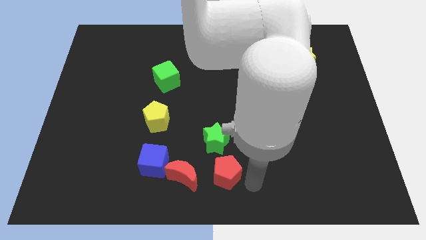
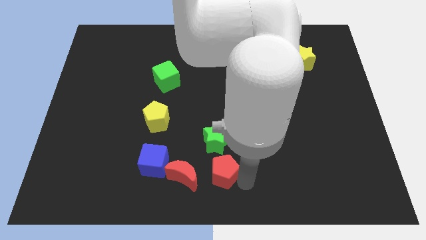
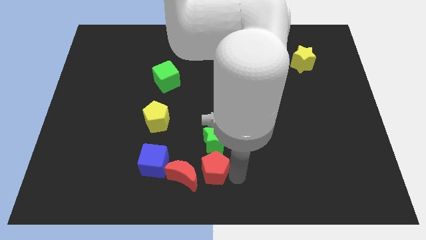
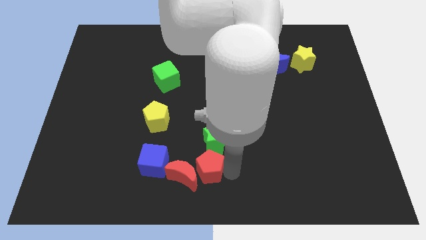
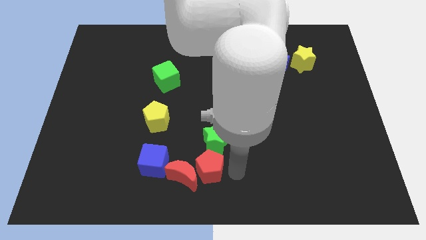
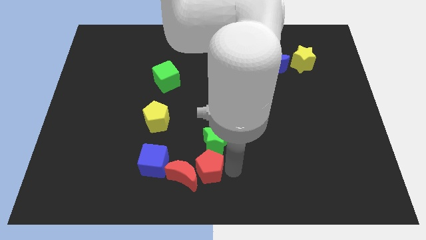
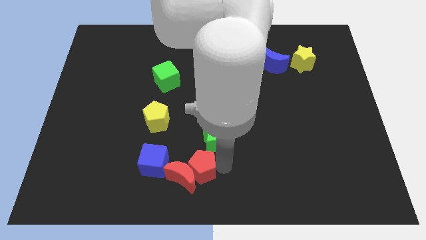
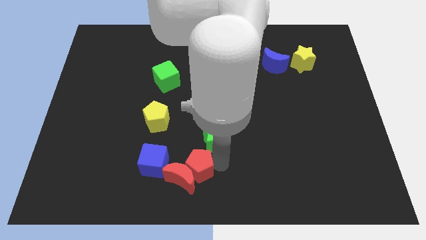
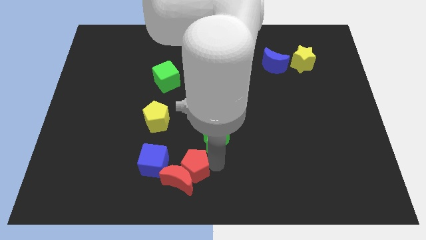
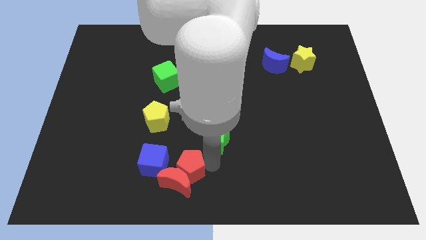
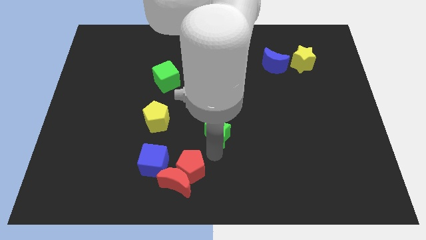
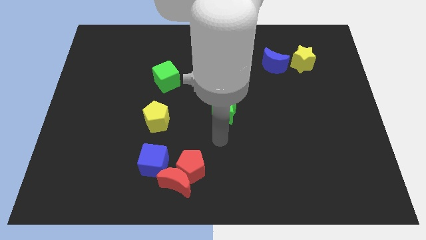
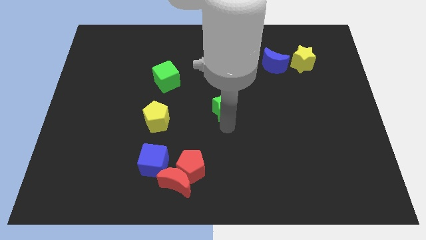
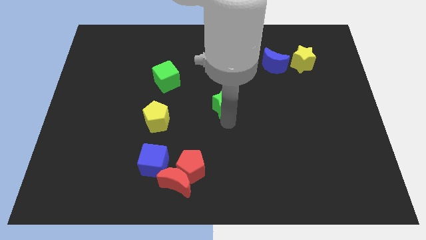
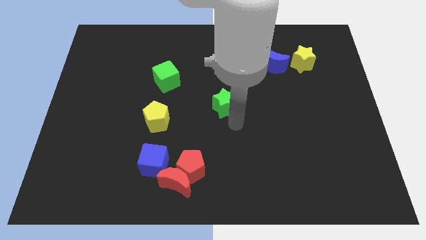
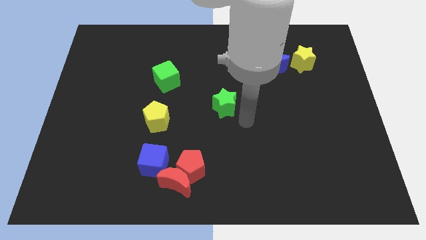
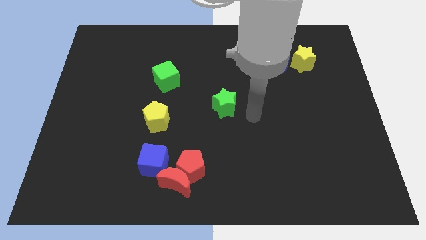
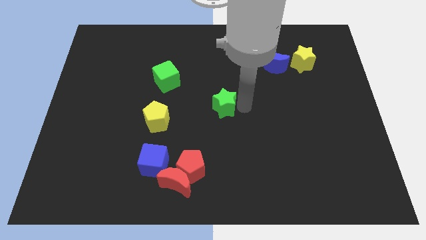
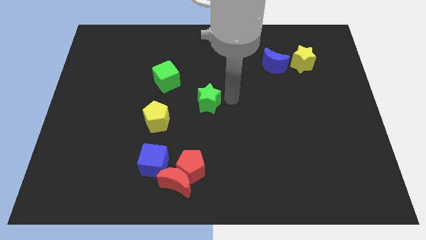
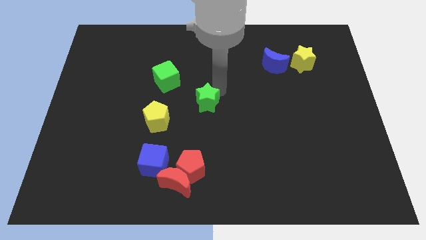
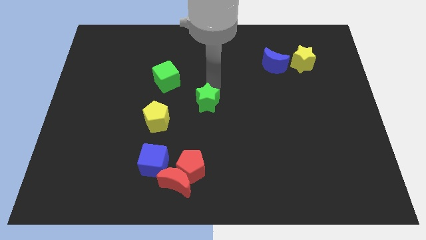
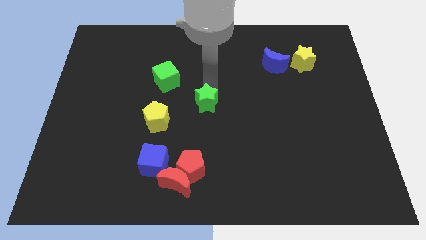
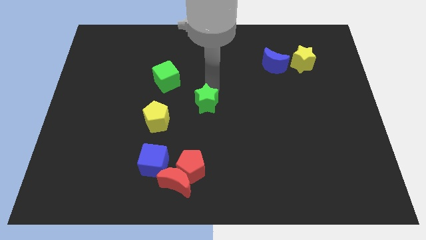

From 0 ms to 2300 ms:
place the red pentagon above the red moon

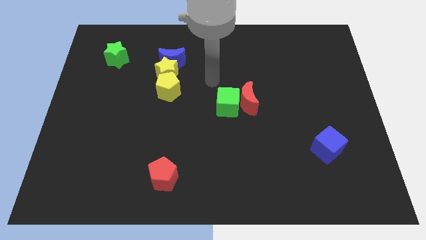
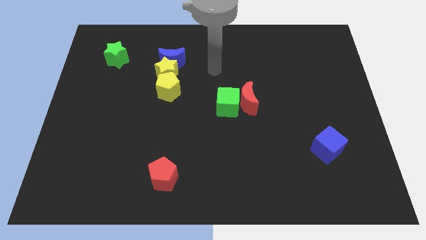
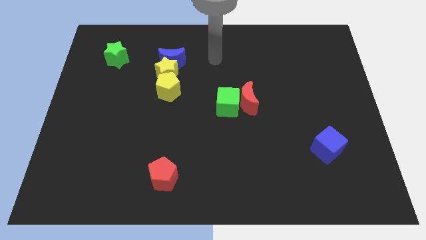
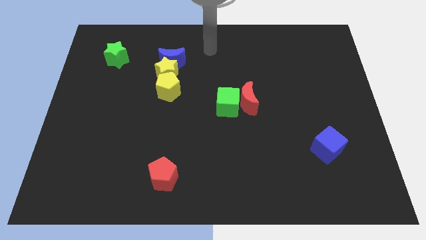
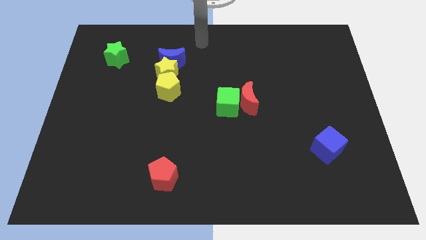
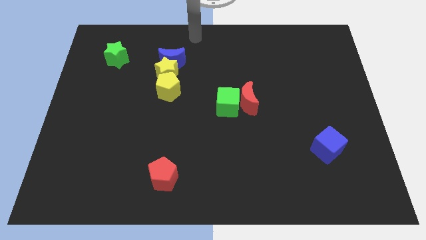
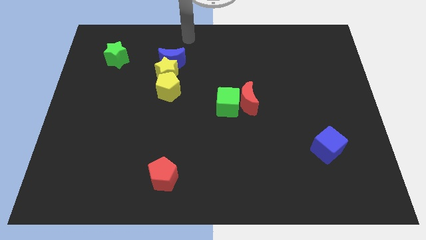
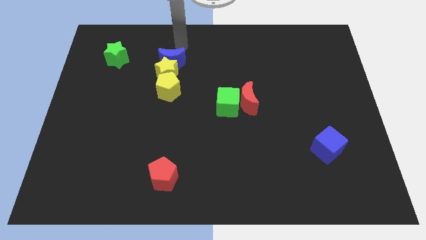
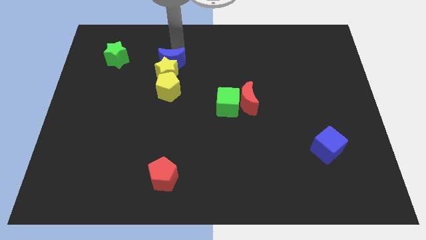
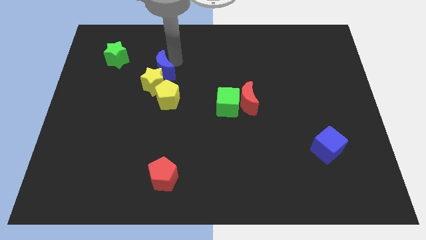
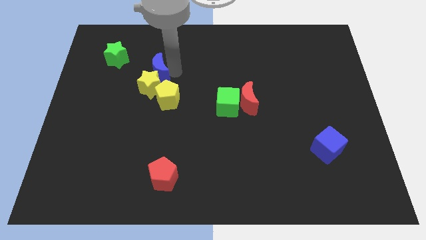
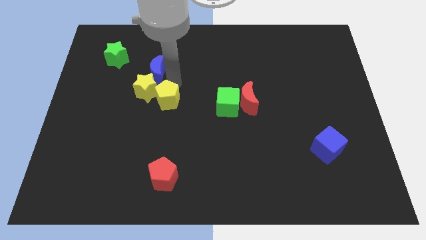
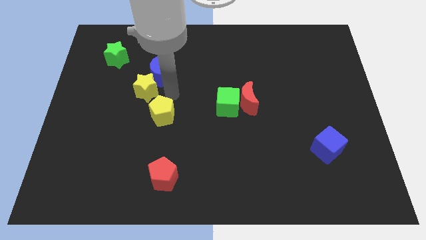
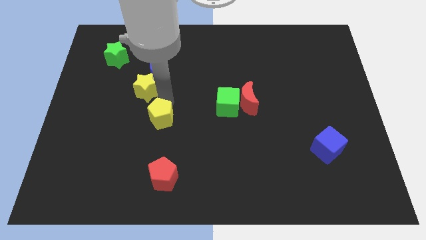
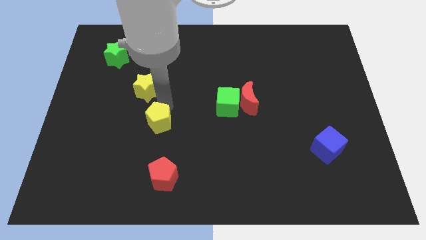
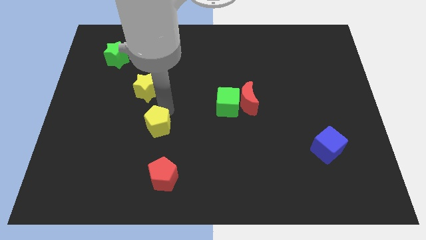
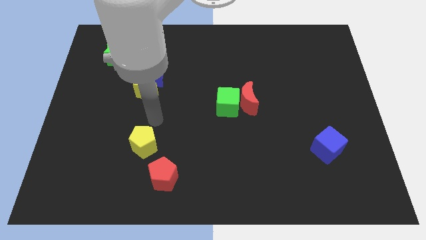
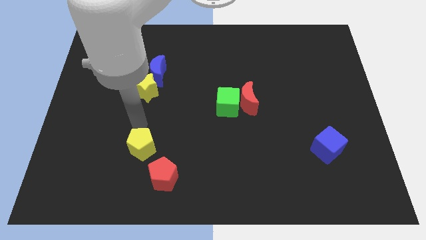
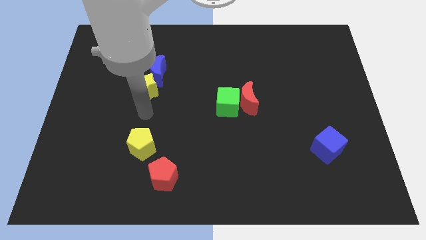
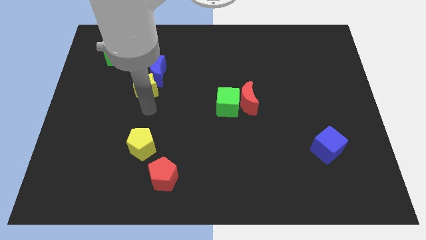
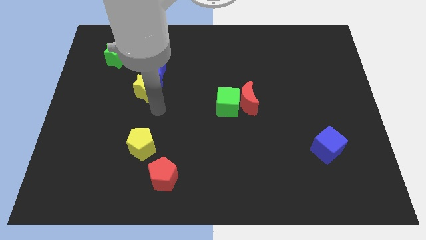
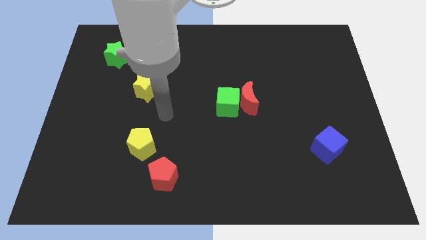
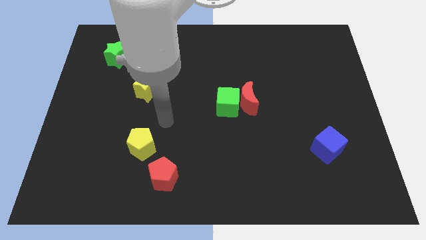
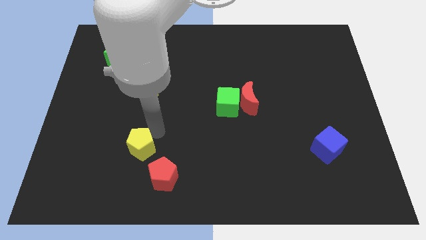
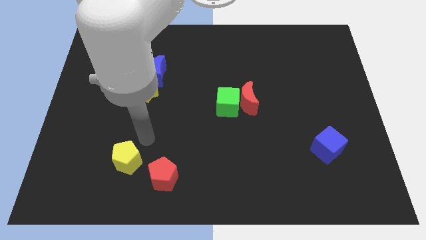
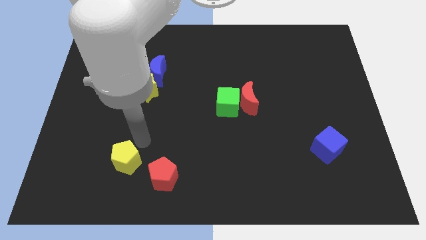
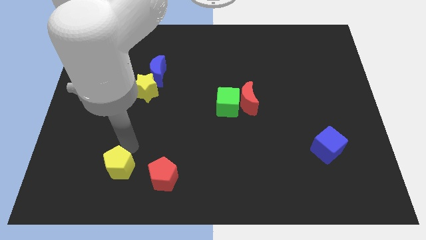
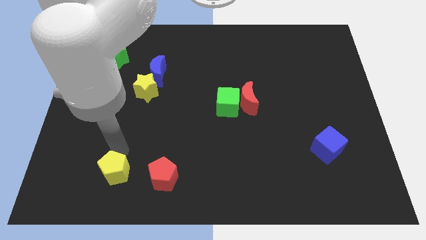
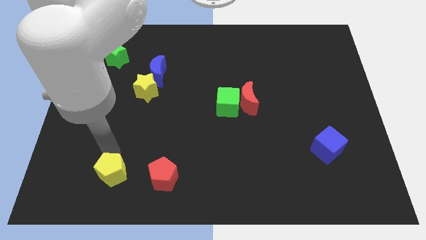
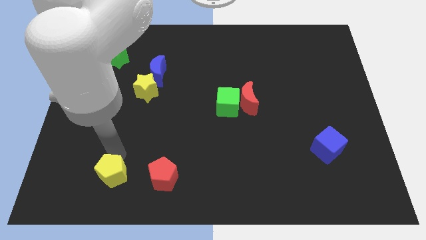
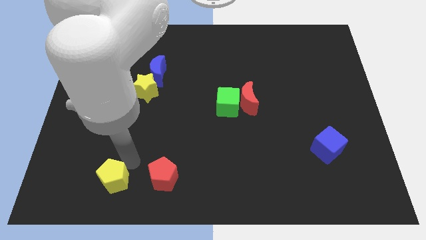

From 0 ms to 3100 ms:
slide the yellow pentagon to the left of the red pentagon

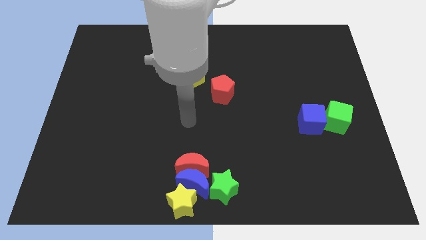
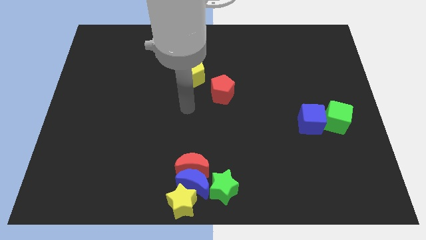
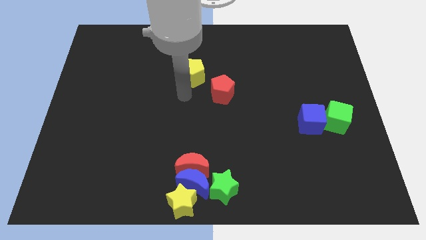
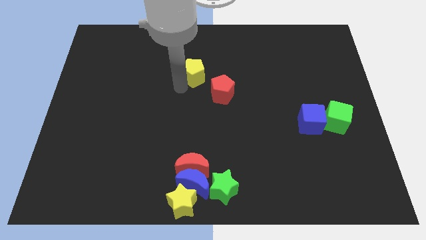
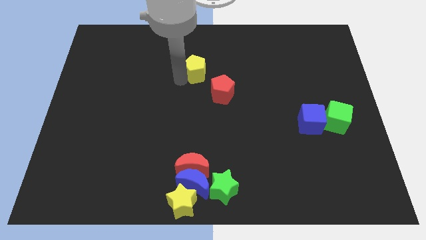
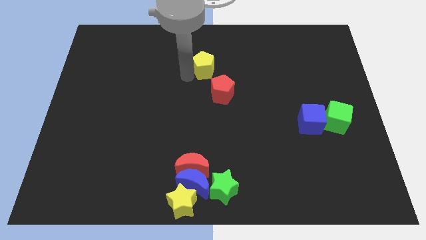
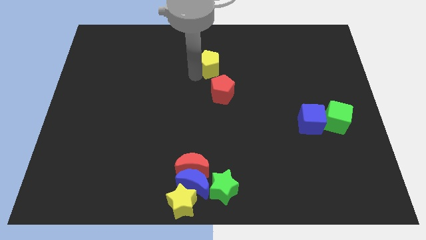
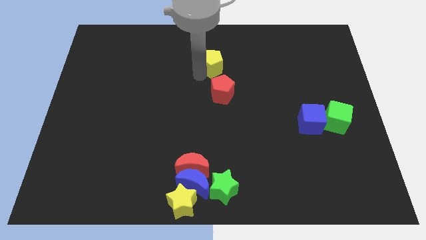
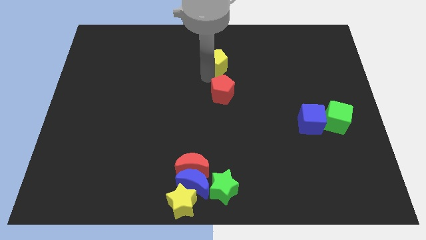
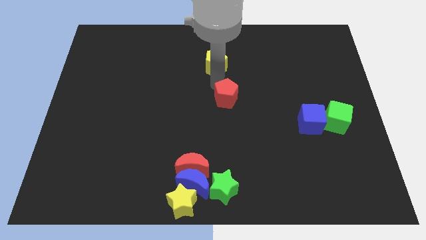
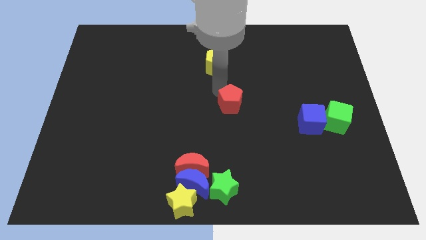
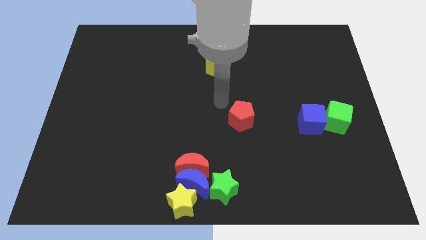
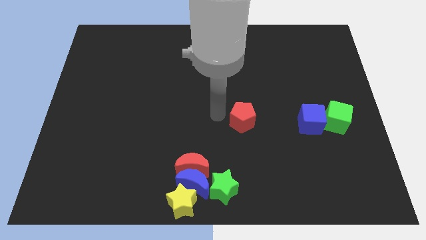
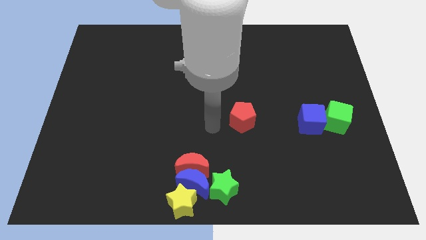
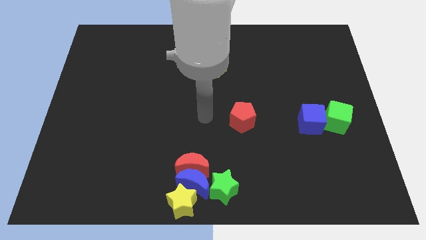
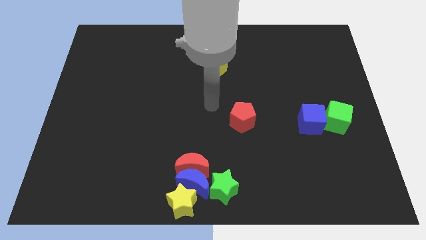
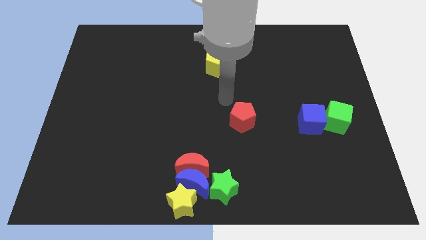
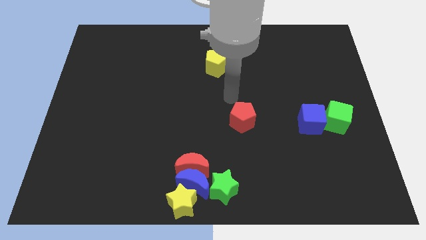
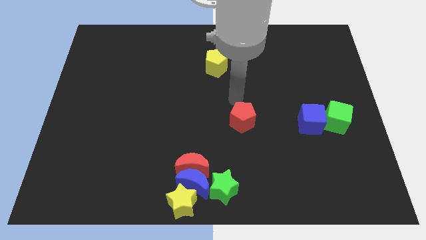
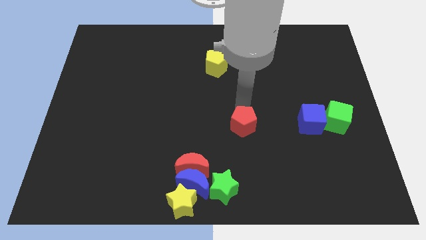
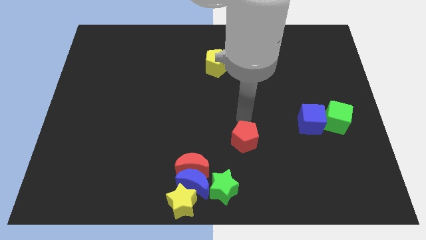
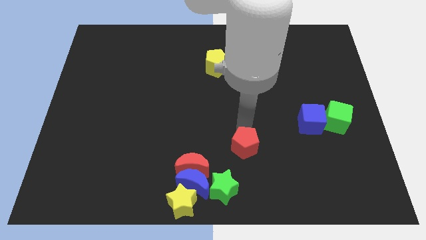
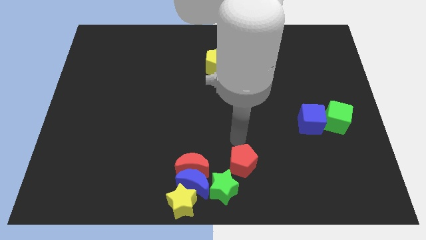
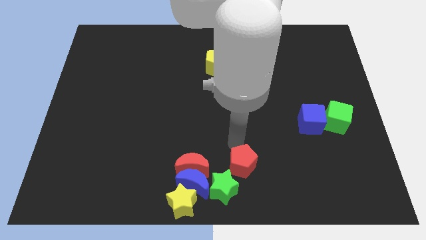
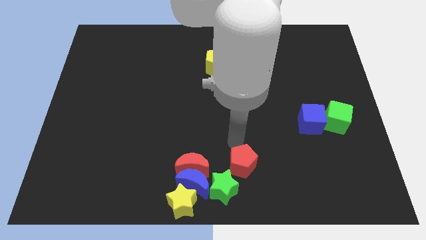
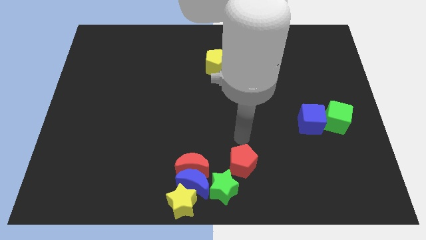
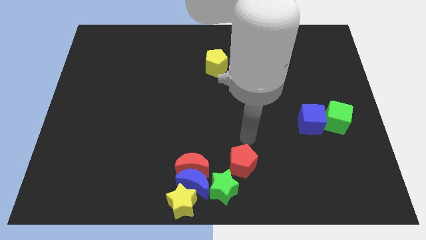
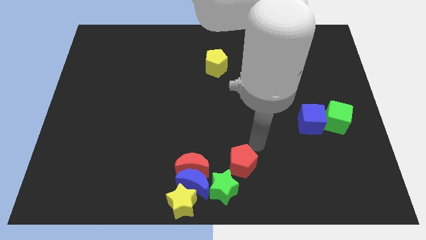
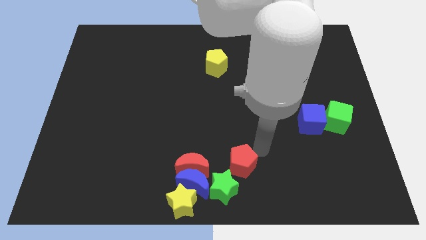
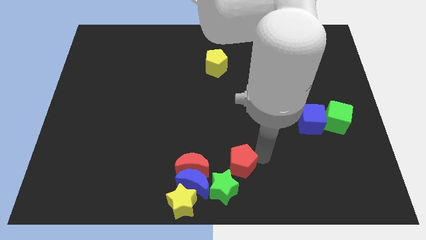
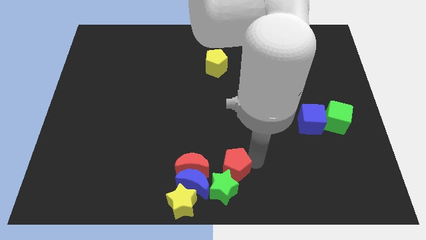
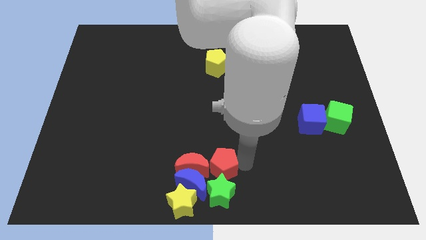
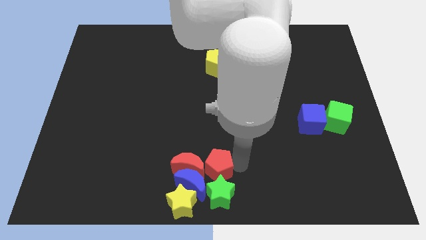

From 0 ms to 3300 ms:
move the red pentagon to the right of the red moon

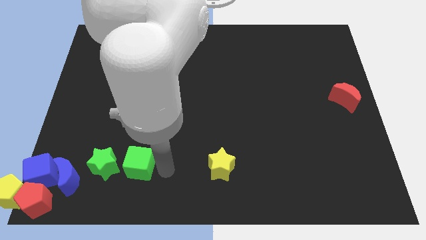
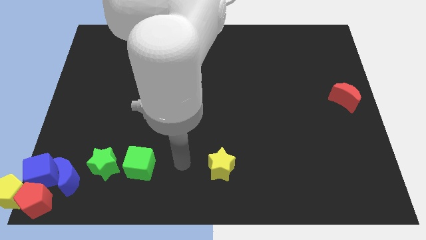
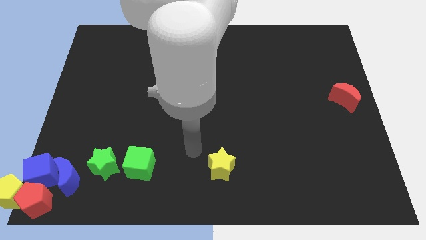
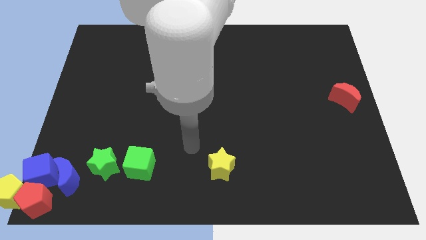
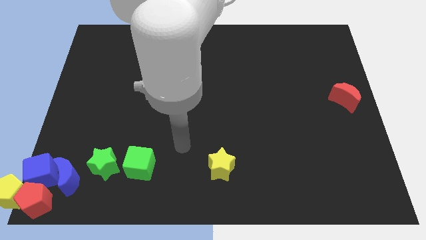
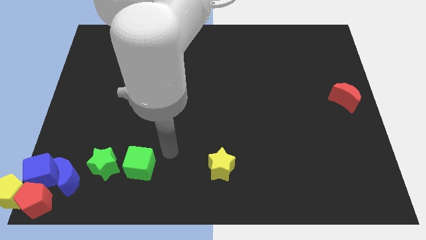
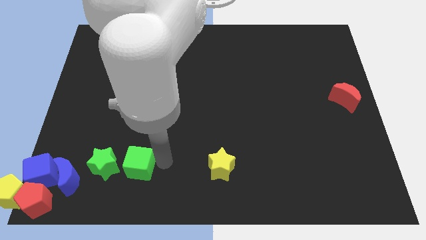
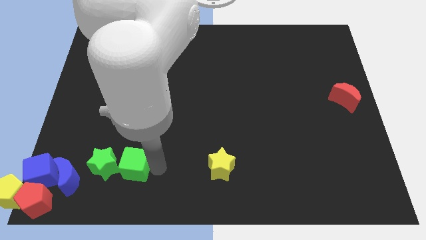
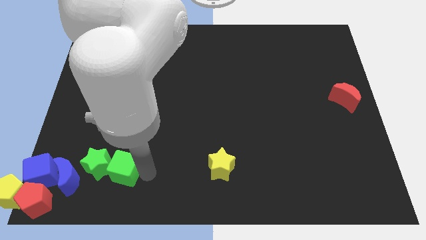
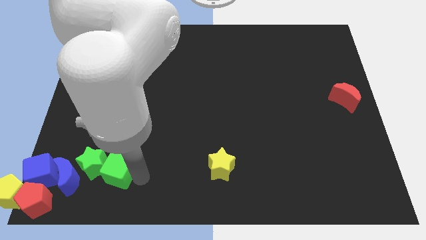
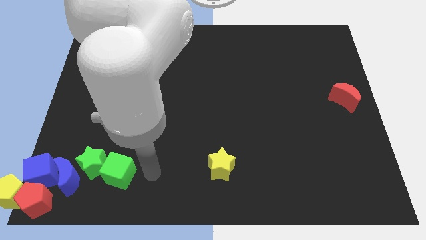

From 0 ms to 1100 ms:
push the green cube into the green star
